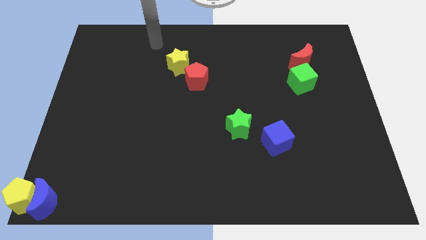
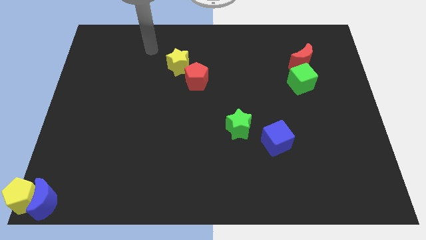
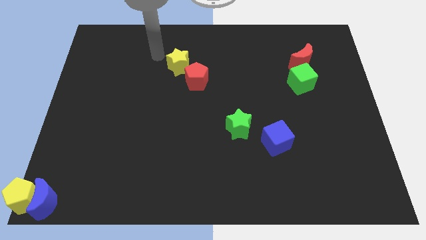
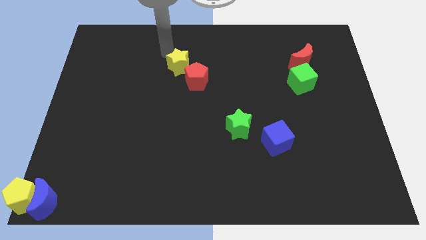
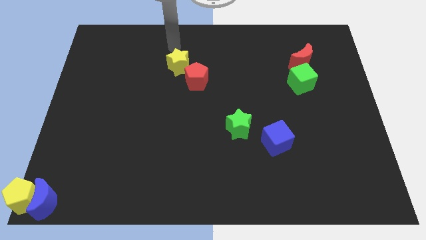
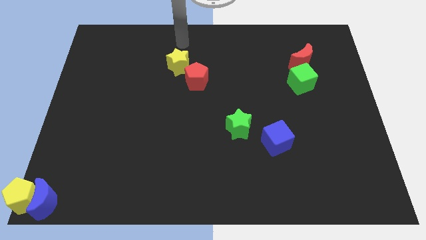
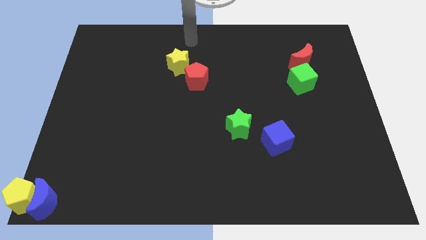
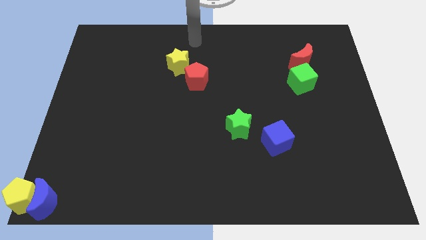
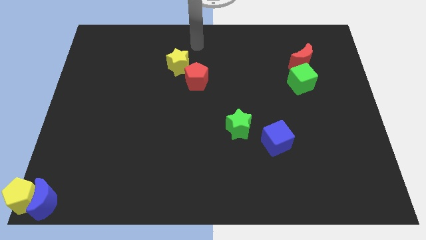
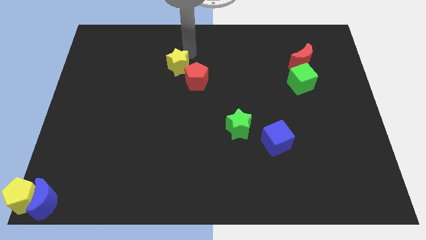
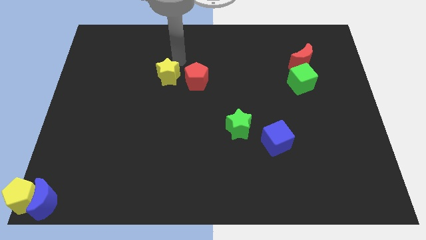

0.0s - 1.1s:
place yellow star to the left of red pentagon

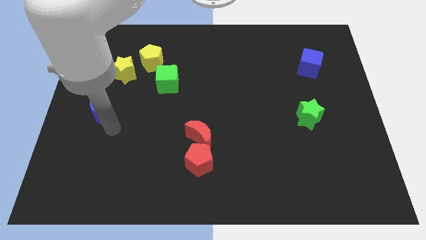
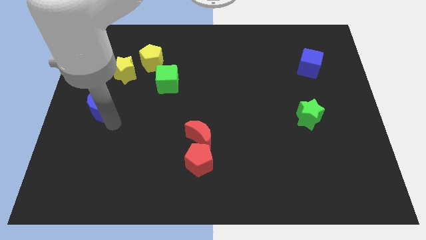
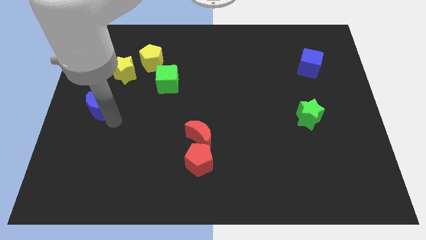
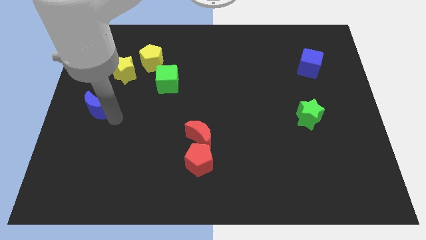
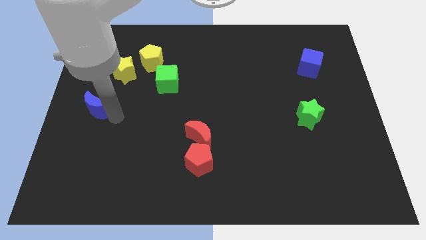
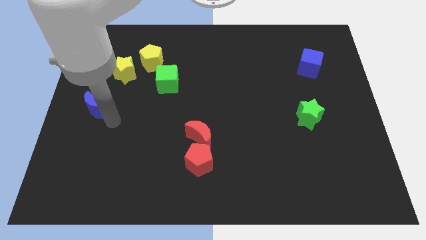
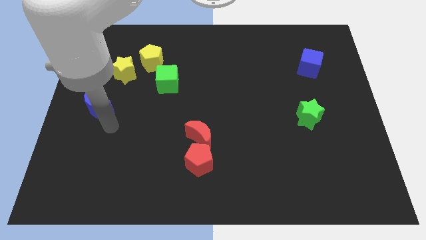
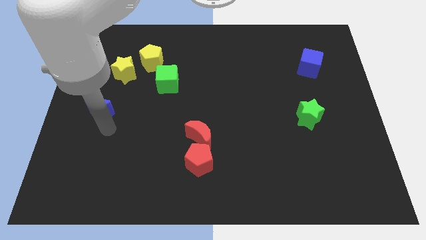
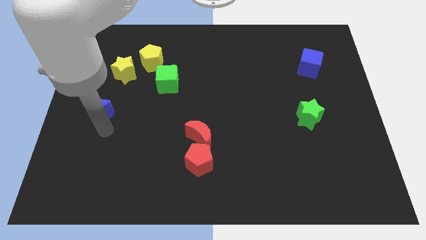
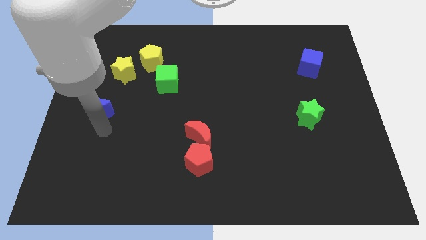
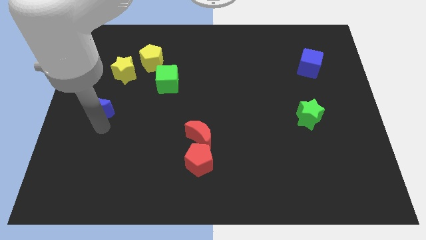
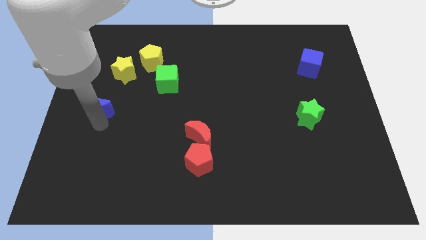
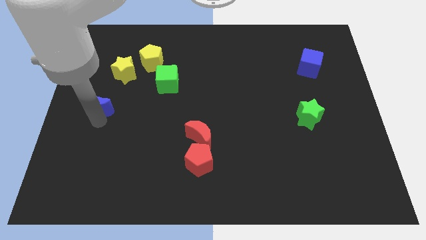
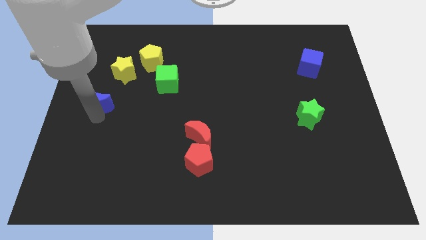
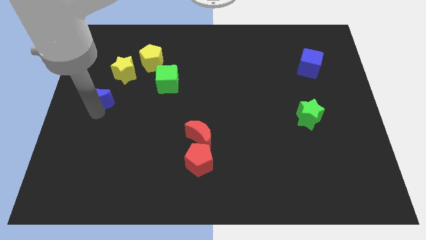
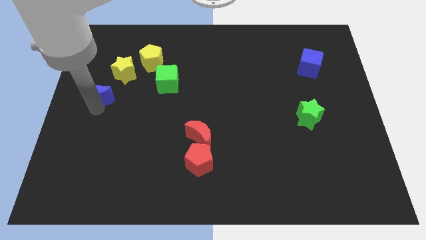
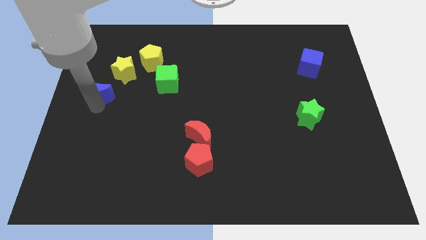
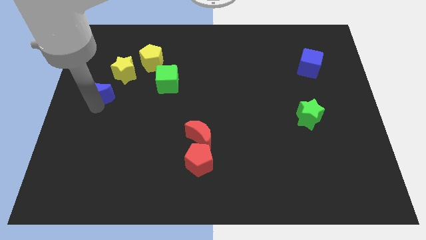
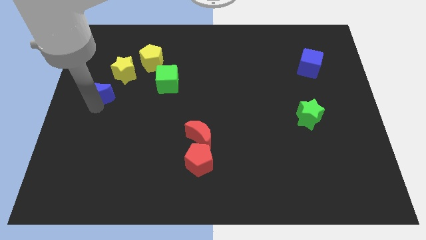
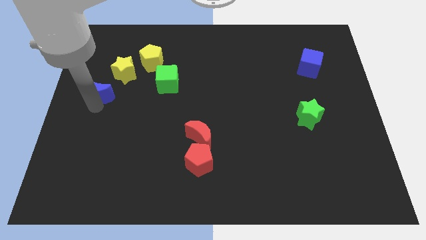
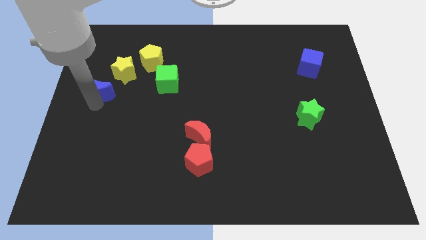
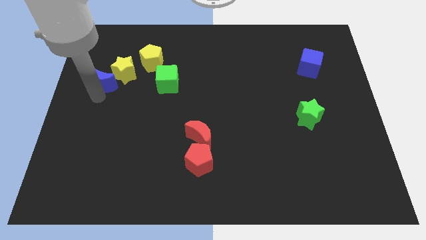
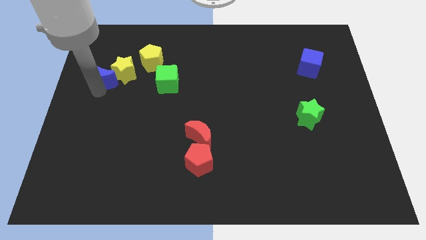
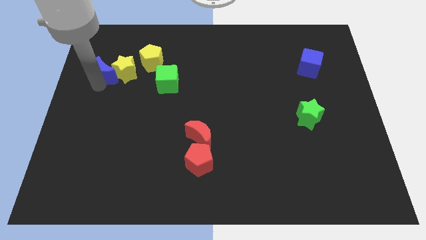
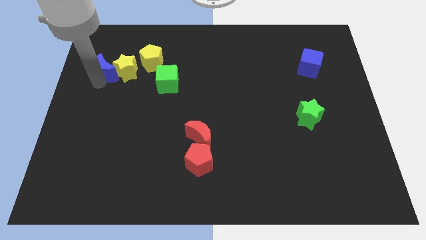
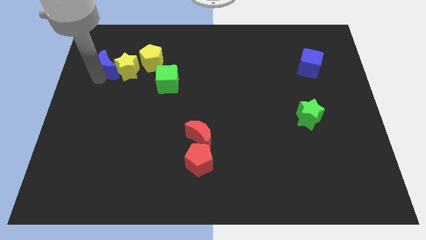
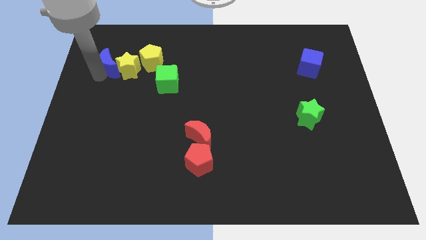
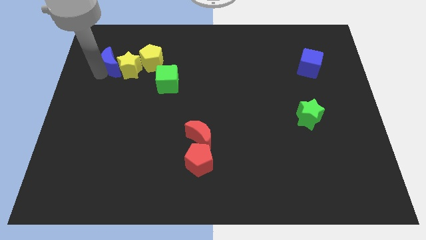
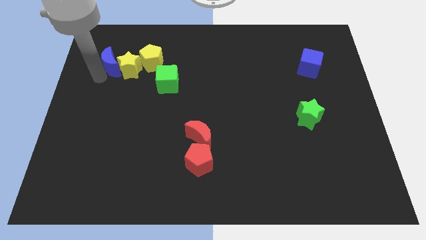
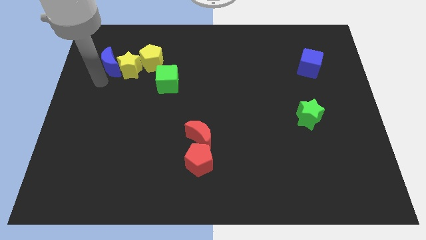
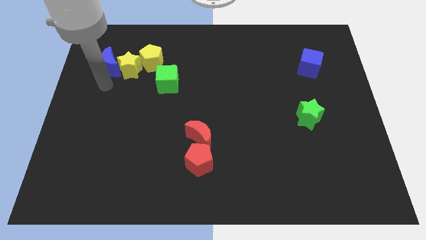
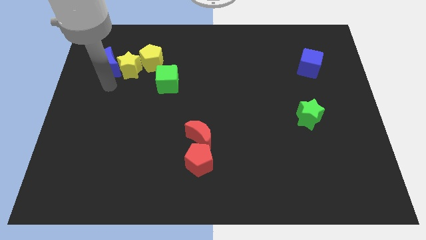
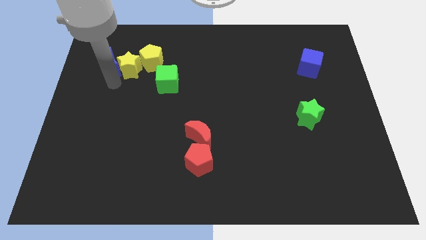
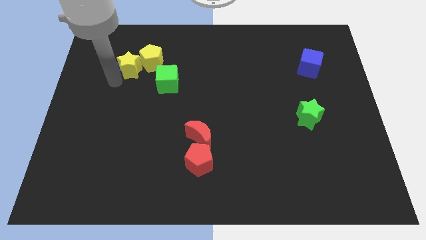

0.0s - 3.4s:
move blue cube into yellow star

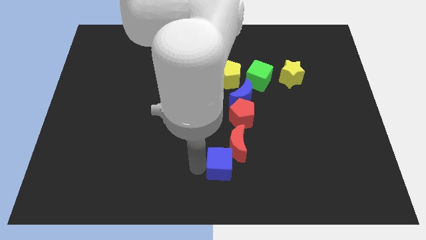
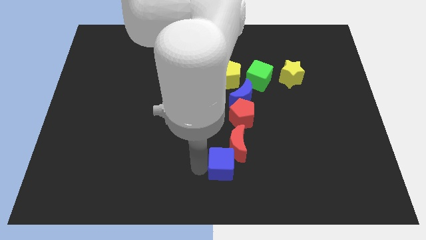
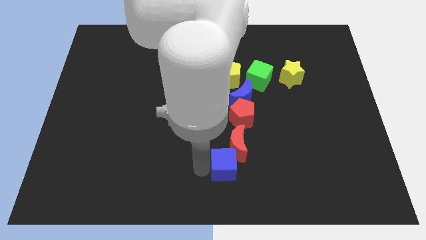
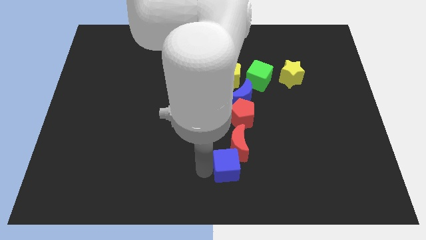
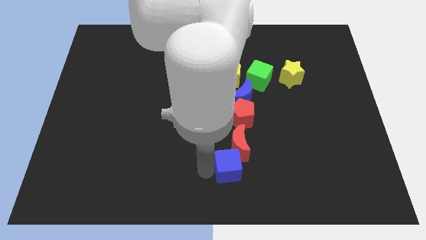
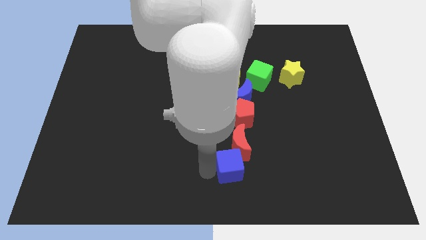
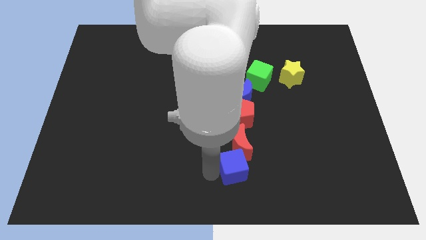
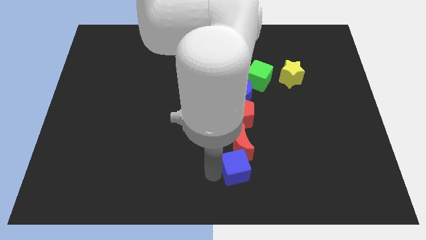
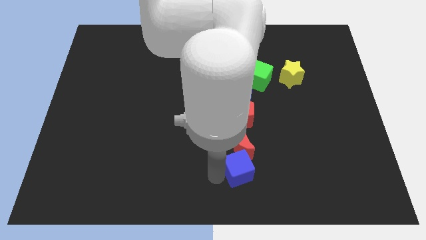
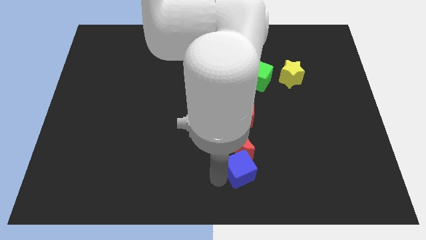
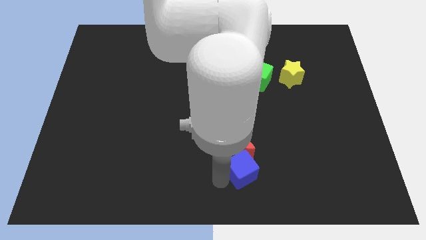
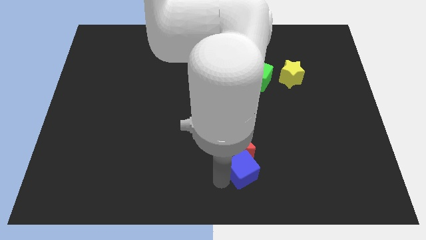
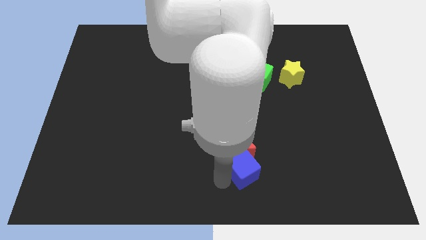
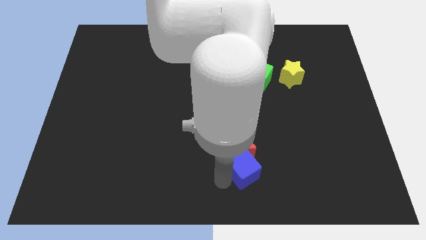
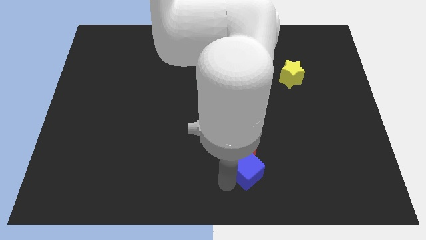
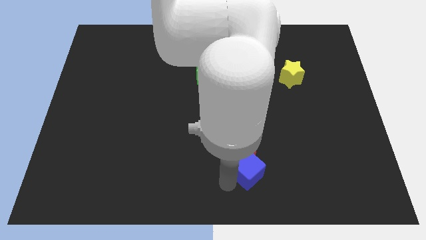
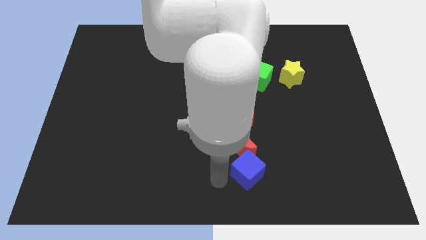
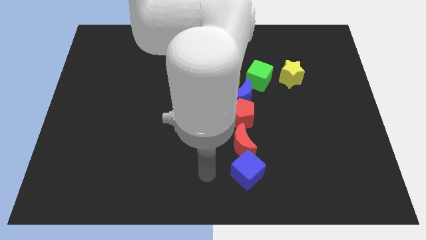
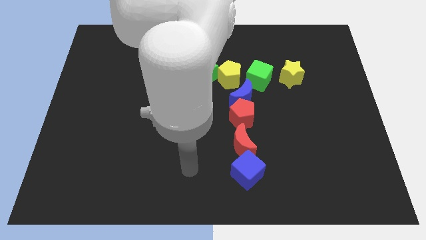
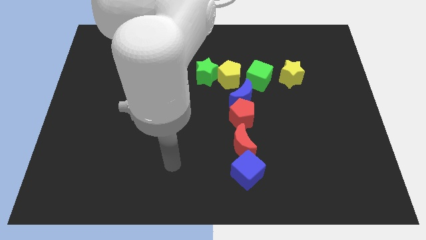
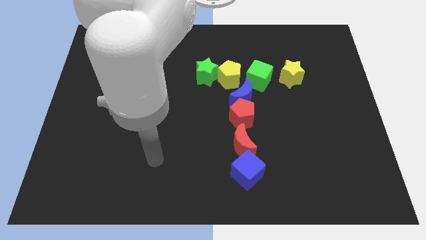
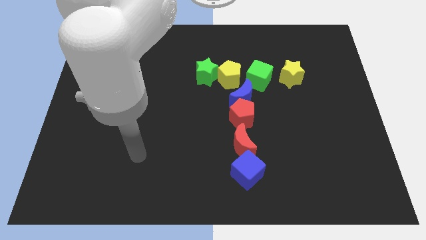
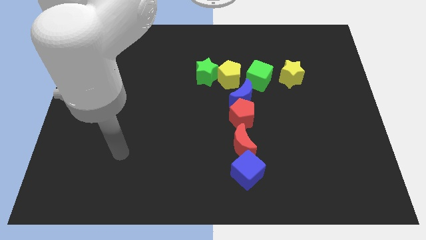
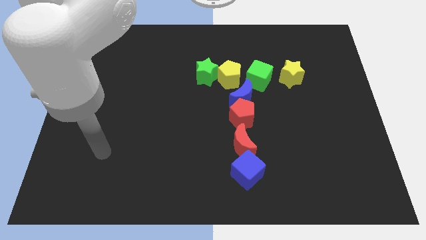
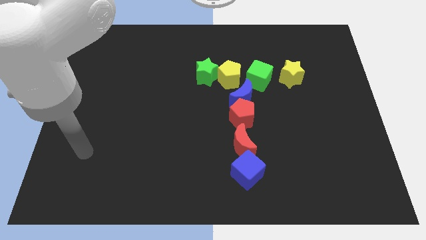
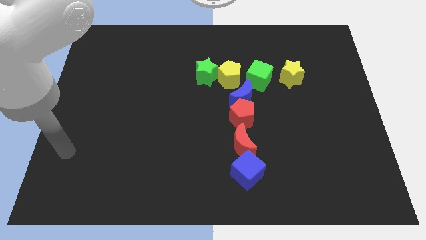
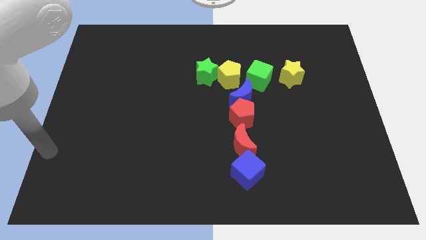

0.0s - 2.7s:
slightly push the red moon and blue cube towards the right side of the board

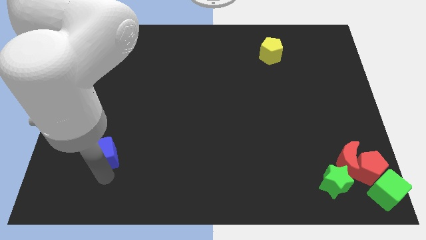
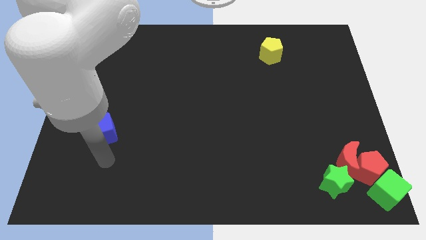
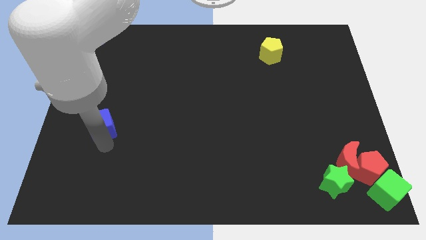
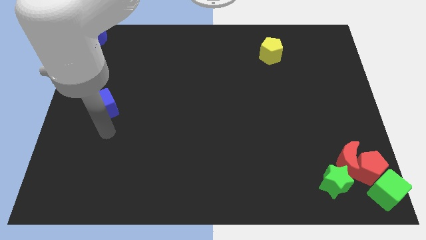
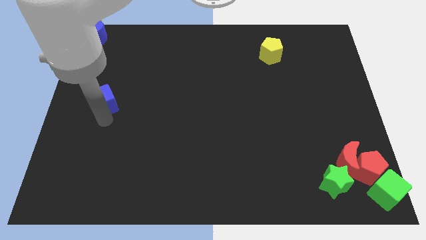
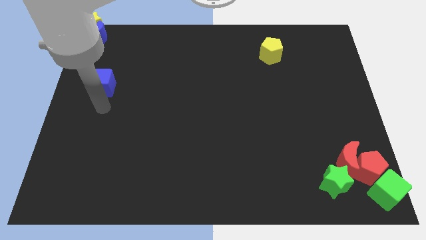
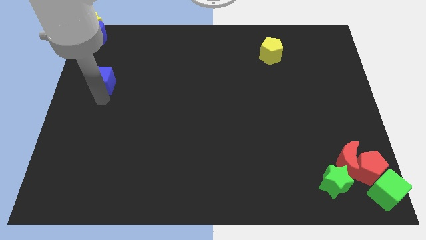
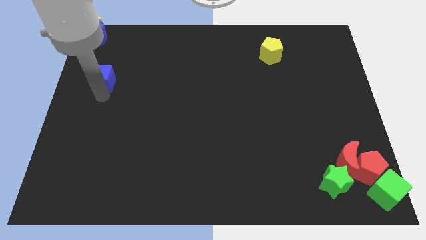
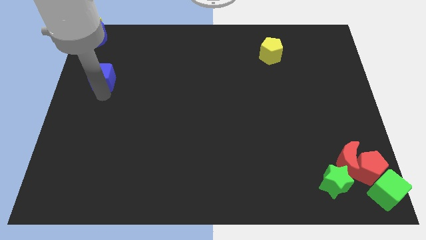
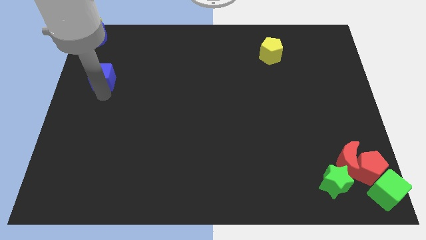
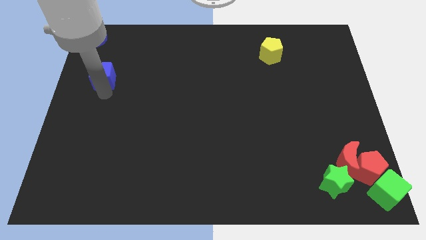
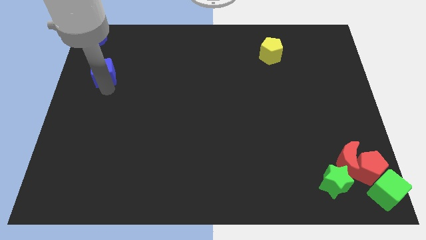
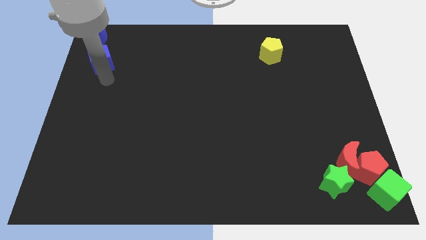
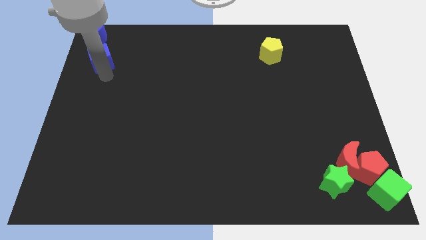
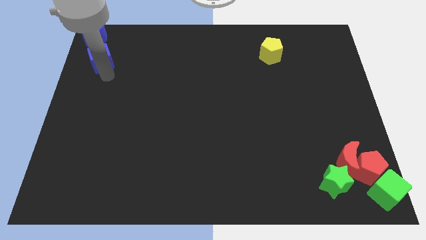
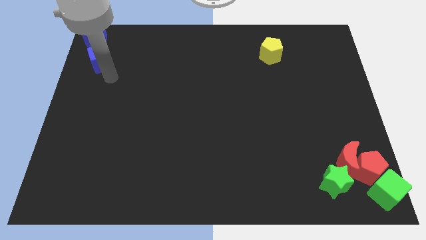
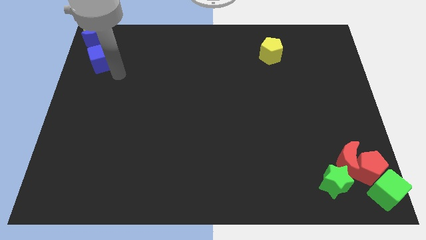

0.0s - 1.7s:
move the blue cube towards the blue crescent

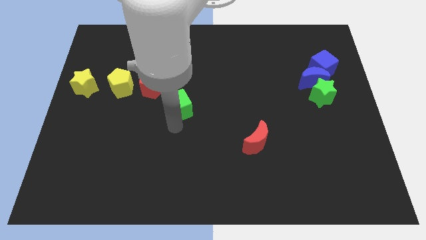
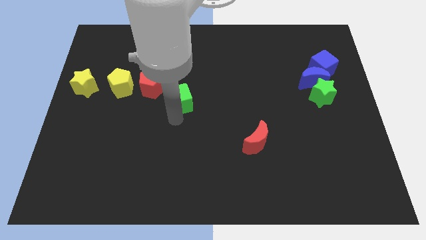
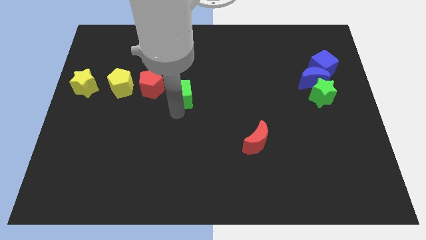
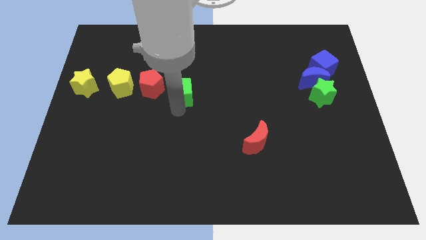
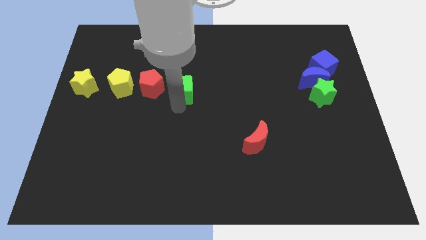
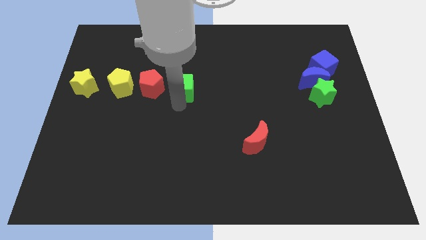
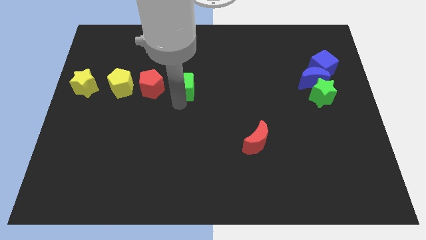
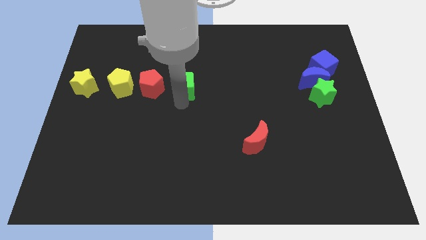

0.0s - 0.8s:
move the green cube to the right of the red pentagon
